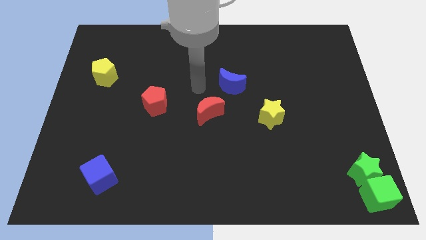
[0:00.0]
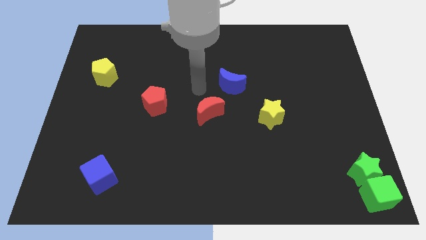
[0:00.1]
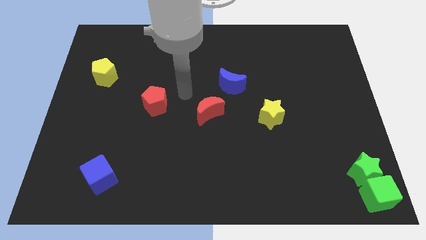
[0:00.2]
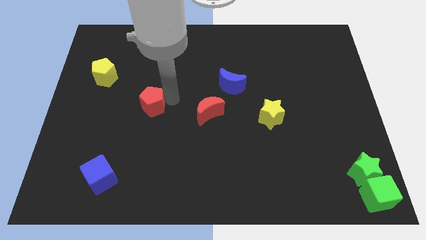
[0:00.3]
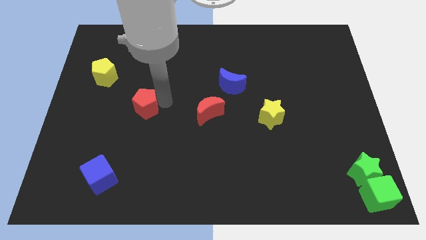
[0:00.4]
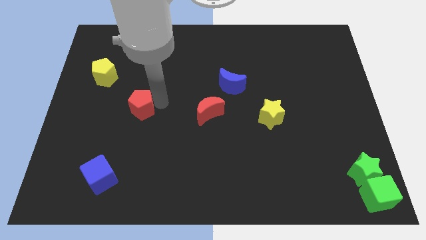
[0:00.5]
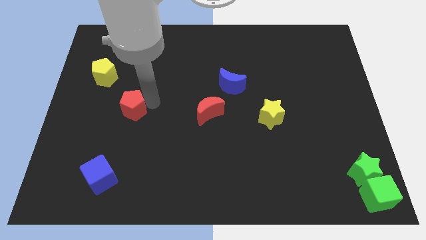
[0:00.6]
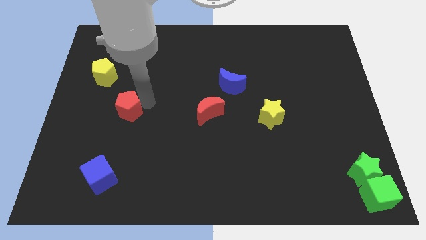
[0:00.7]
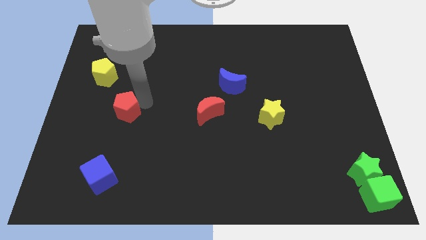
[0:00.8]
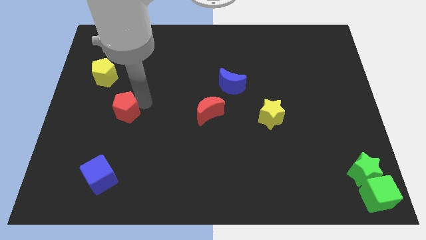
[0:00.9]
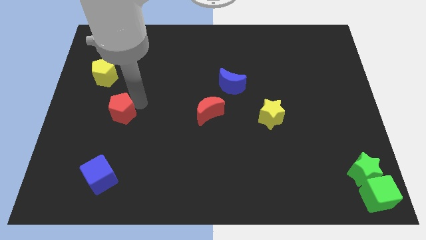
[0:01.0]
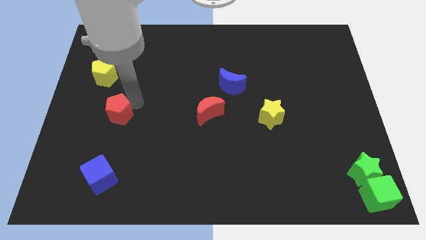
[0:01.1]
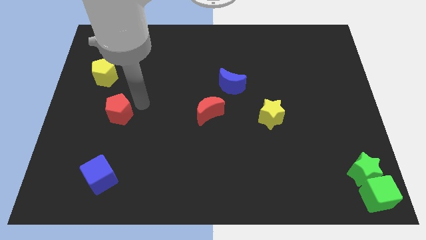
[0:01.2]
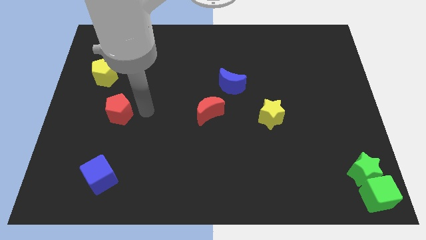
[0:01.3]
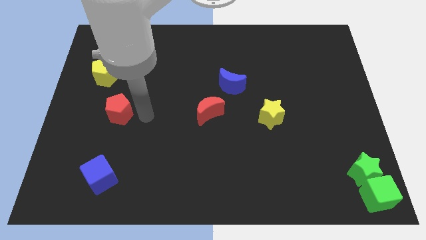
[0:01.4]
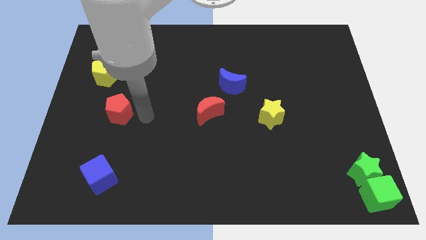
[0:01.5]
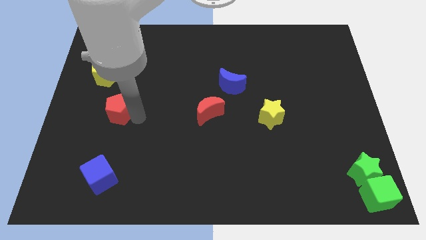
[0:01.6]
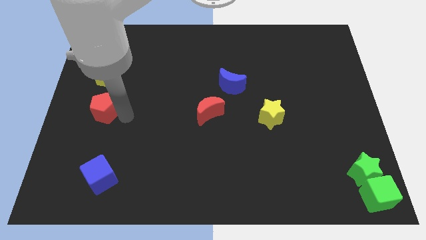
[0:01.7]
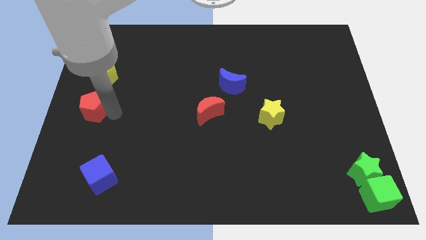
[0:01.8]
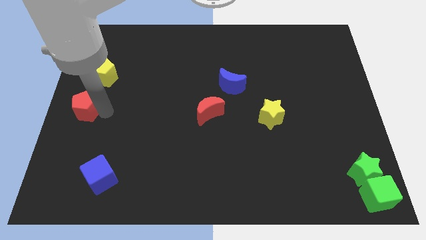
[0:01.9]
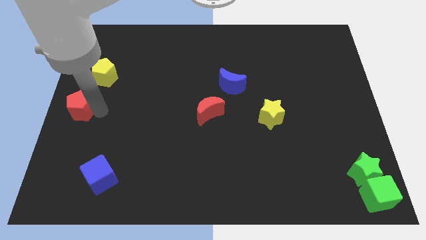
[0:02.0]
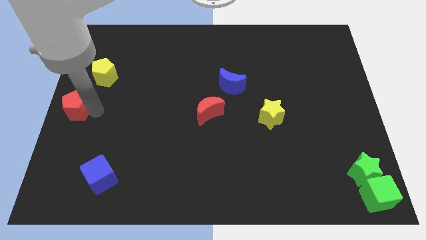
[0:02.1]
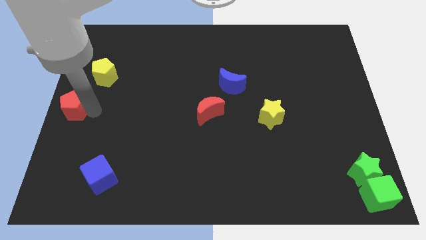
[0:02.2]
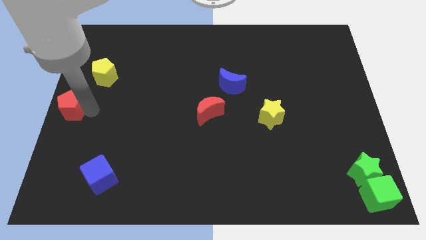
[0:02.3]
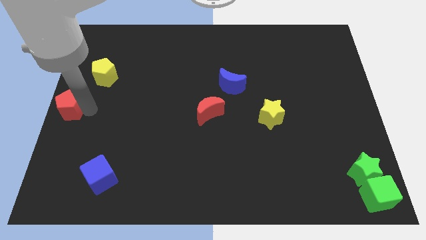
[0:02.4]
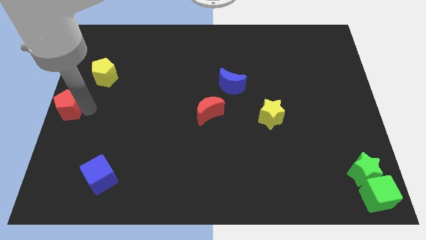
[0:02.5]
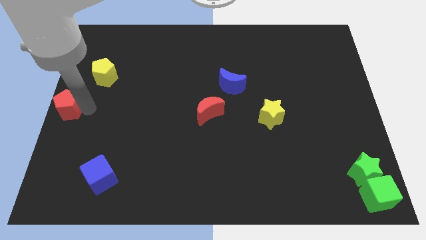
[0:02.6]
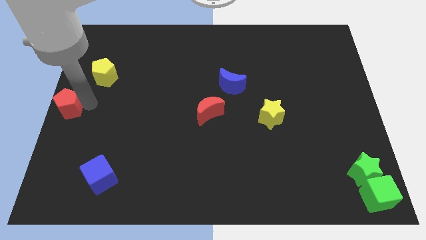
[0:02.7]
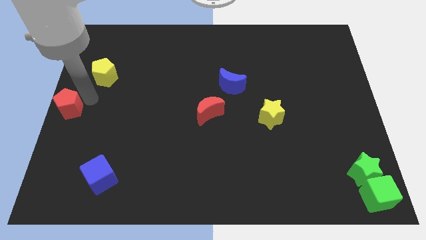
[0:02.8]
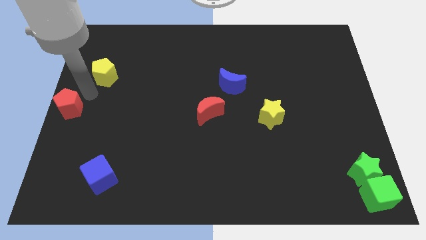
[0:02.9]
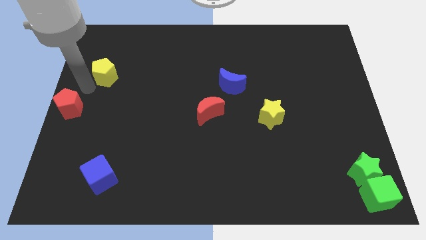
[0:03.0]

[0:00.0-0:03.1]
move the red pentagon to the middle left of the board

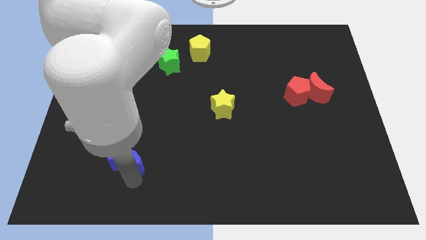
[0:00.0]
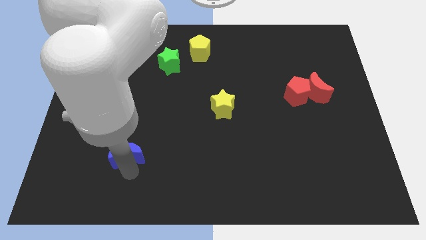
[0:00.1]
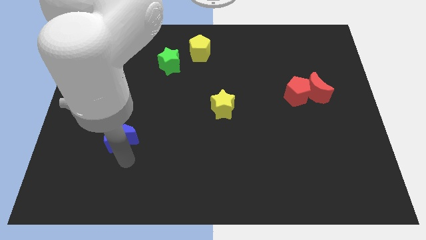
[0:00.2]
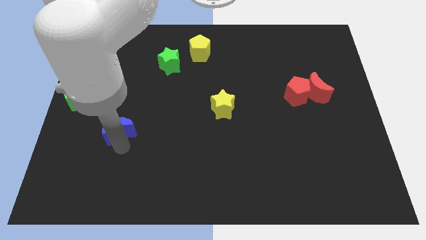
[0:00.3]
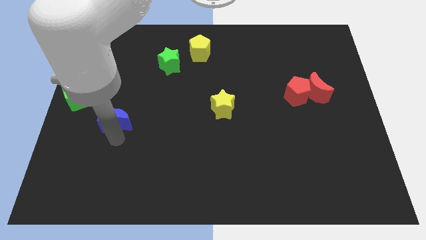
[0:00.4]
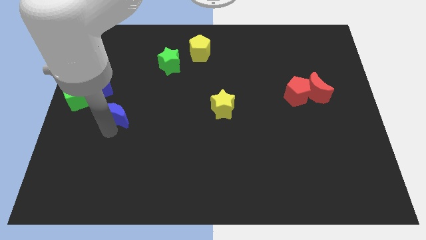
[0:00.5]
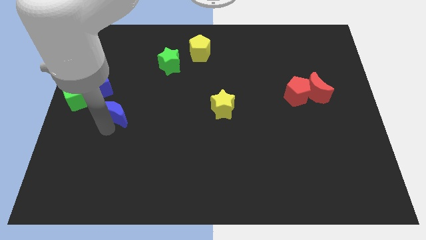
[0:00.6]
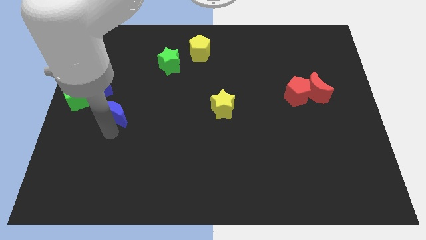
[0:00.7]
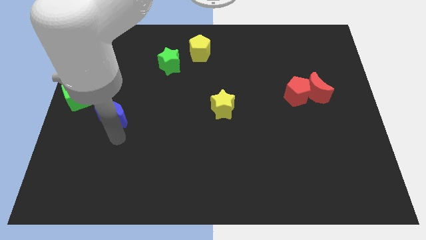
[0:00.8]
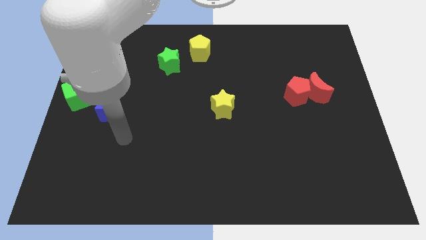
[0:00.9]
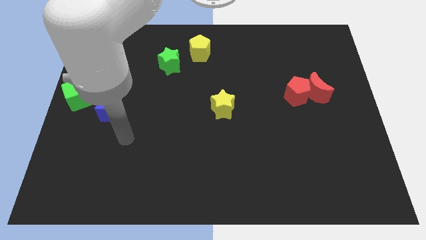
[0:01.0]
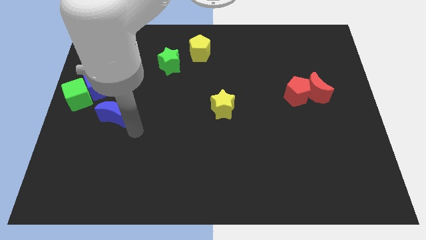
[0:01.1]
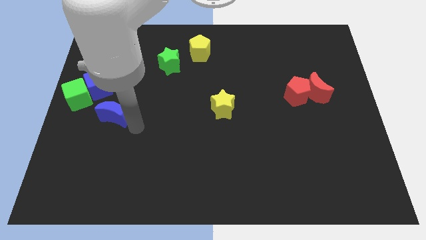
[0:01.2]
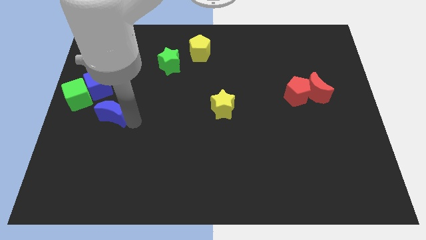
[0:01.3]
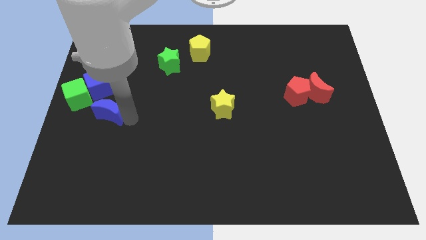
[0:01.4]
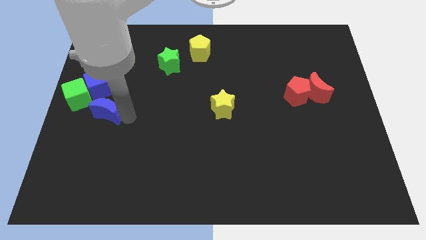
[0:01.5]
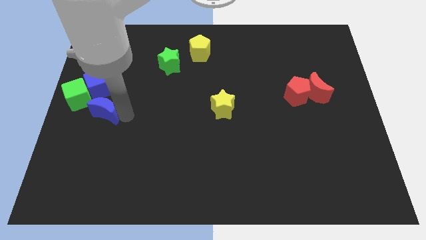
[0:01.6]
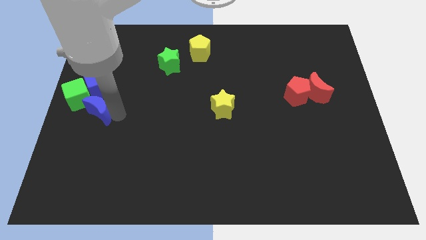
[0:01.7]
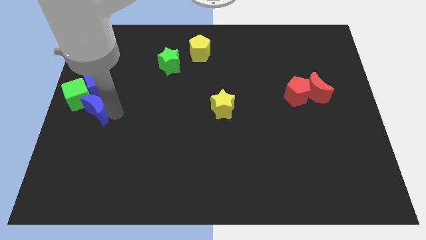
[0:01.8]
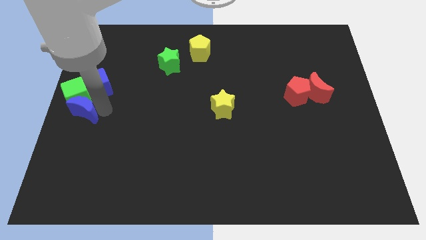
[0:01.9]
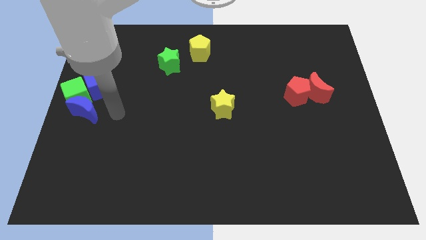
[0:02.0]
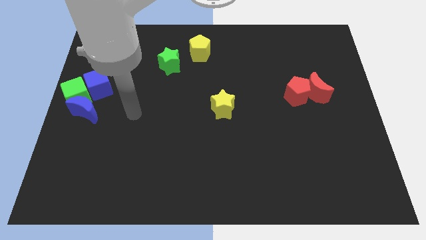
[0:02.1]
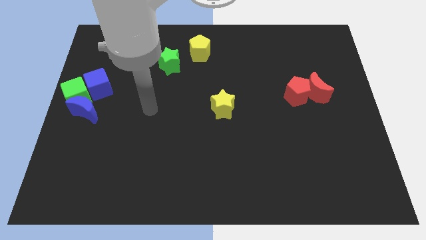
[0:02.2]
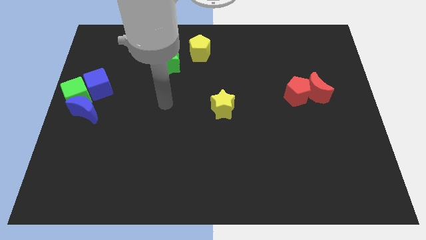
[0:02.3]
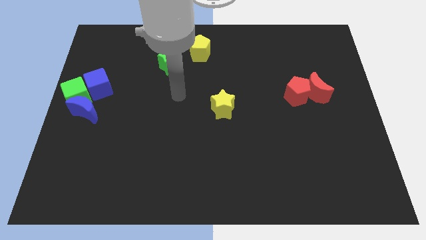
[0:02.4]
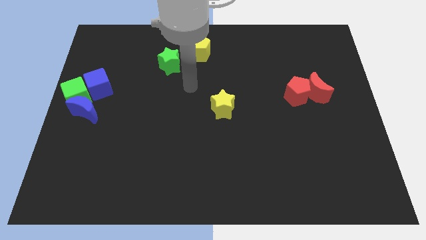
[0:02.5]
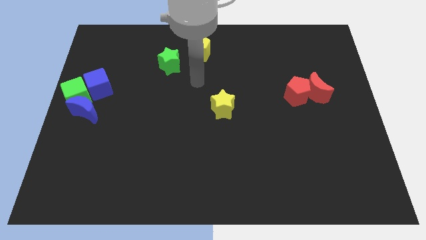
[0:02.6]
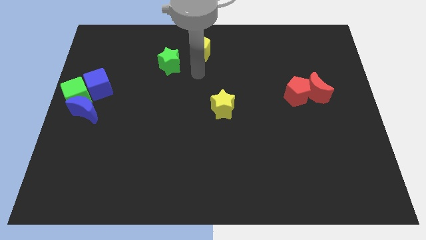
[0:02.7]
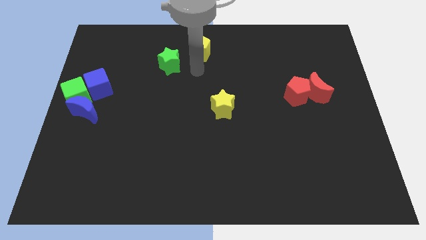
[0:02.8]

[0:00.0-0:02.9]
push blue moon towards green cube

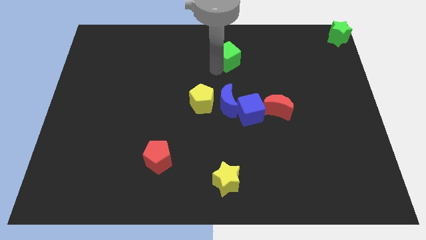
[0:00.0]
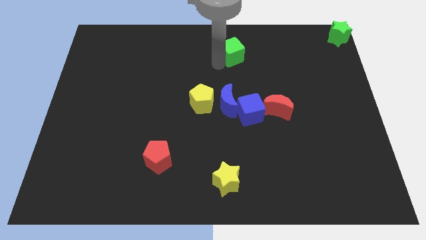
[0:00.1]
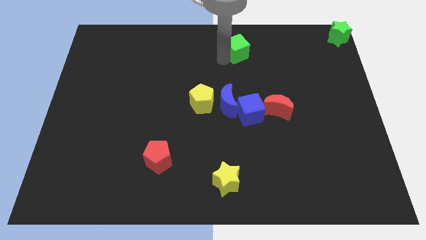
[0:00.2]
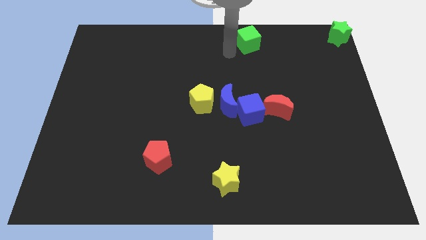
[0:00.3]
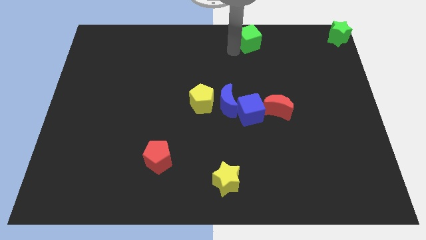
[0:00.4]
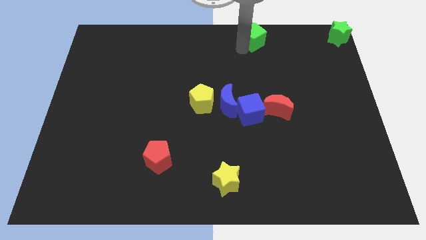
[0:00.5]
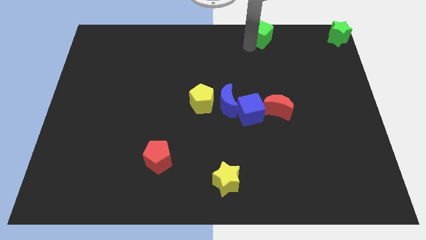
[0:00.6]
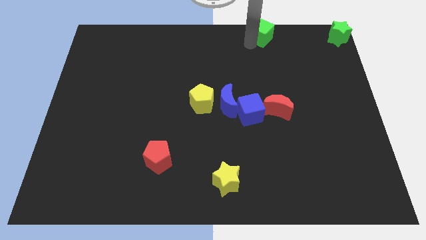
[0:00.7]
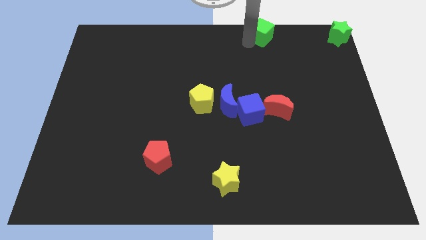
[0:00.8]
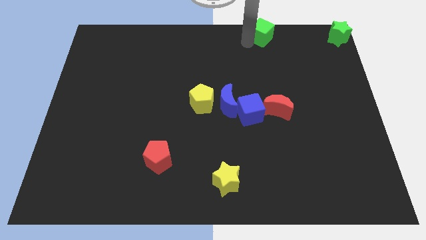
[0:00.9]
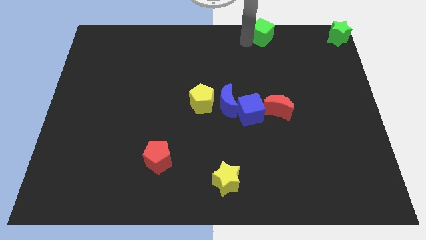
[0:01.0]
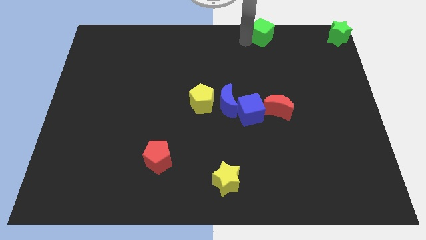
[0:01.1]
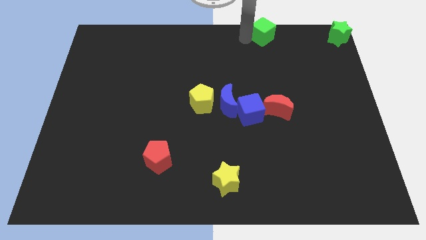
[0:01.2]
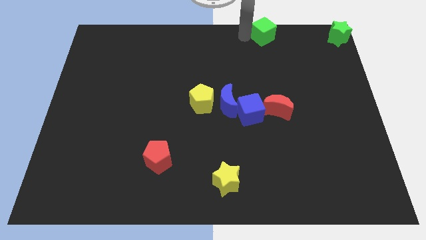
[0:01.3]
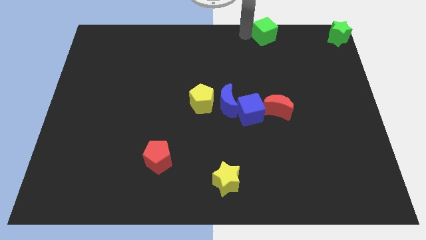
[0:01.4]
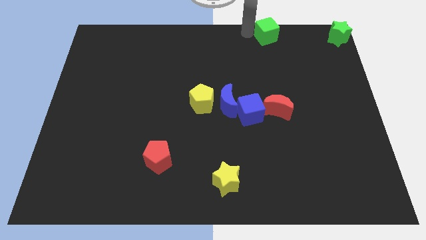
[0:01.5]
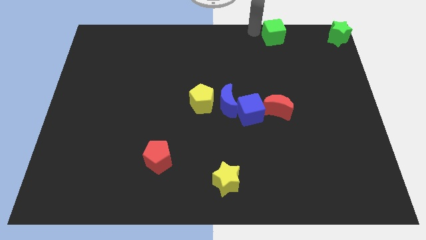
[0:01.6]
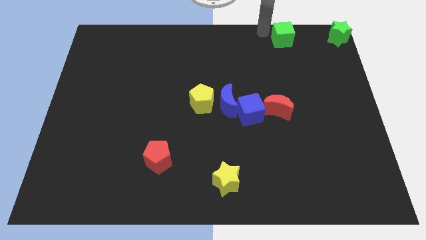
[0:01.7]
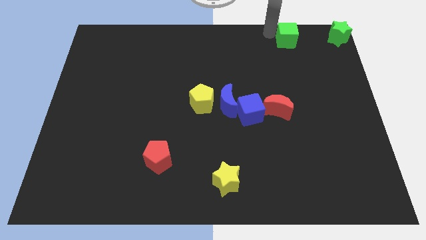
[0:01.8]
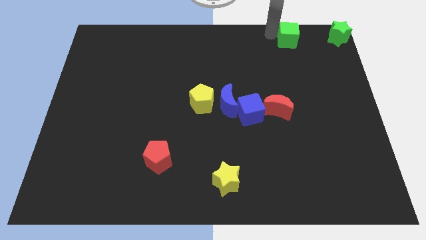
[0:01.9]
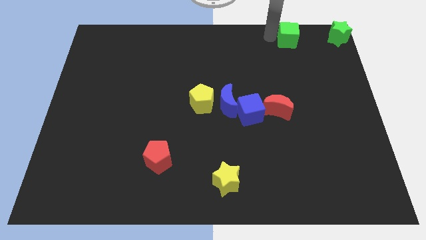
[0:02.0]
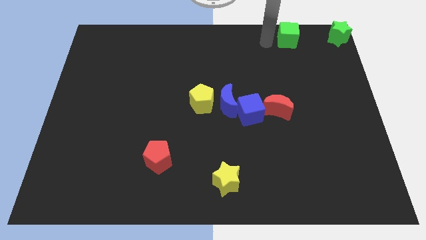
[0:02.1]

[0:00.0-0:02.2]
move the green cube to the horizontal left of the green star

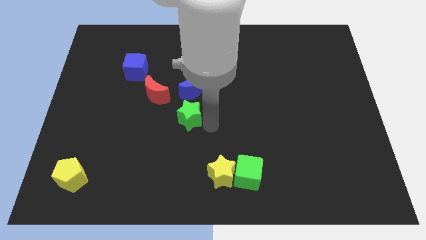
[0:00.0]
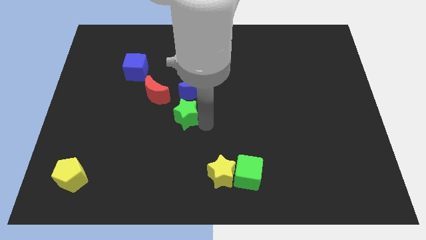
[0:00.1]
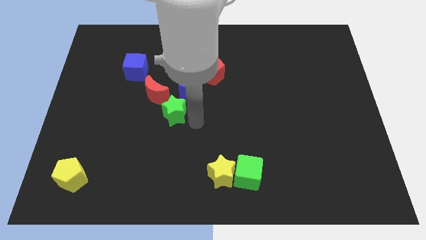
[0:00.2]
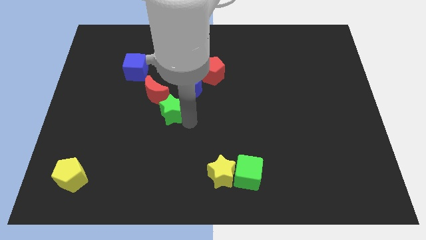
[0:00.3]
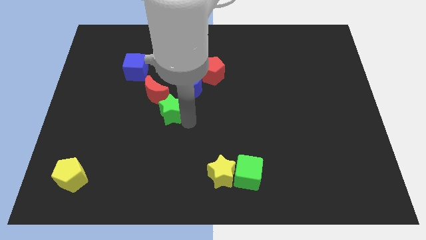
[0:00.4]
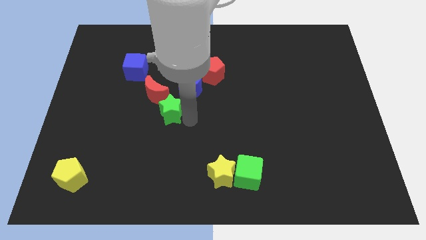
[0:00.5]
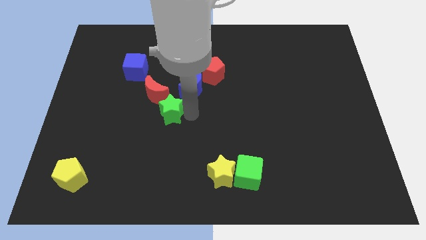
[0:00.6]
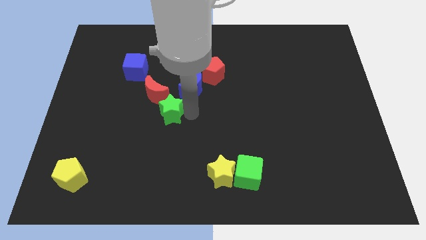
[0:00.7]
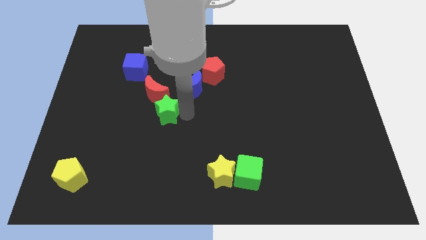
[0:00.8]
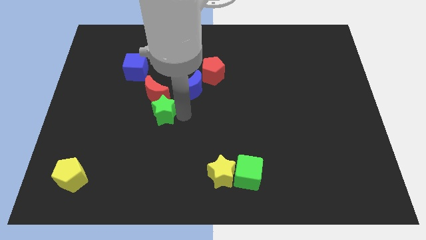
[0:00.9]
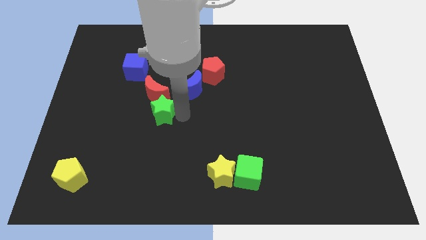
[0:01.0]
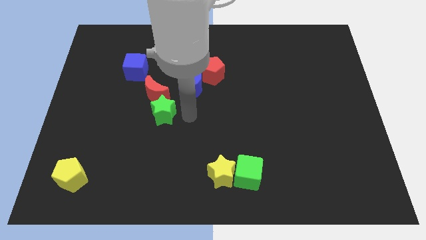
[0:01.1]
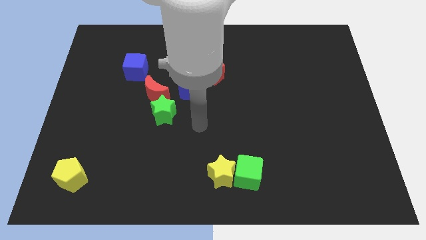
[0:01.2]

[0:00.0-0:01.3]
slide the green star to the bottom right side of the red crescent
